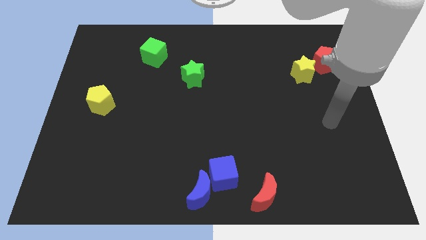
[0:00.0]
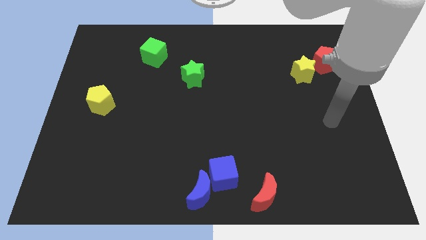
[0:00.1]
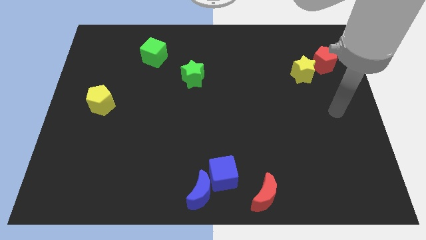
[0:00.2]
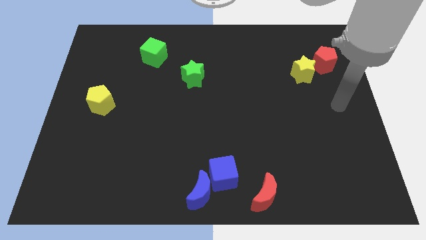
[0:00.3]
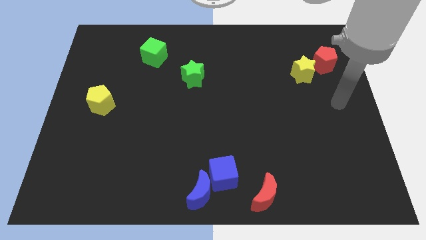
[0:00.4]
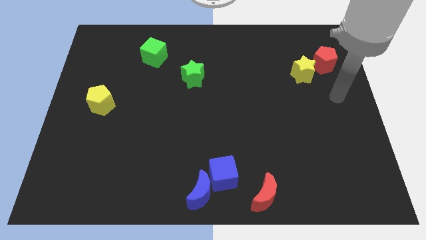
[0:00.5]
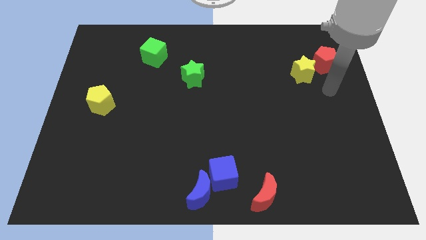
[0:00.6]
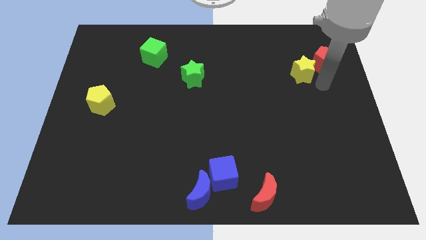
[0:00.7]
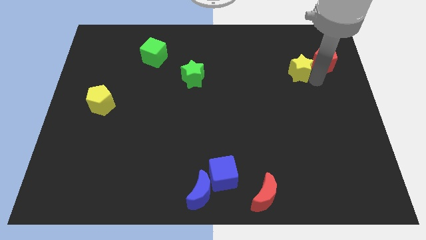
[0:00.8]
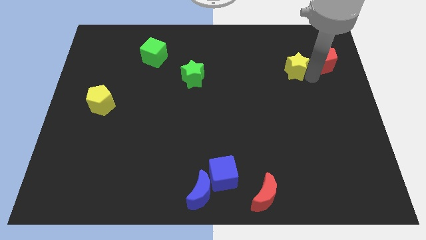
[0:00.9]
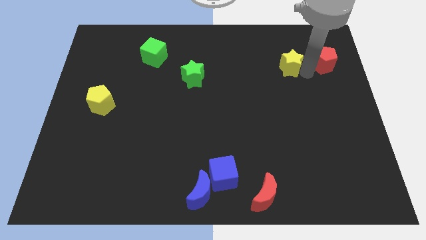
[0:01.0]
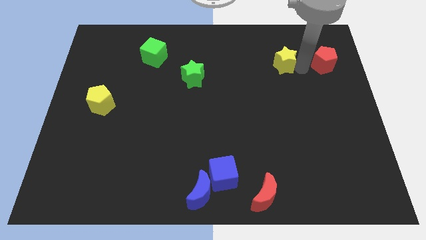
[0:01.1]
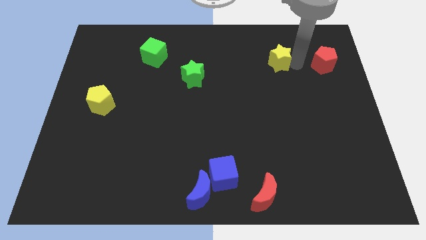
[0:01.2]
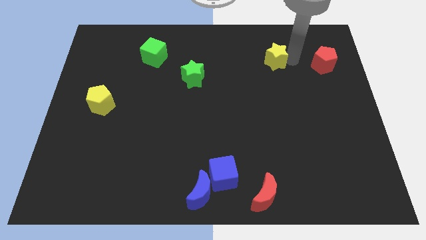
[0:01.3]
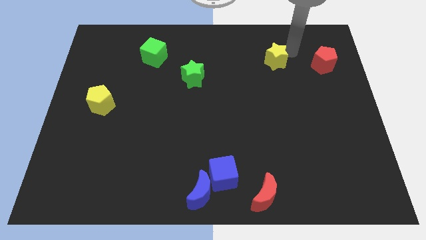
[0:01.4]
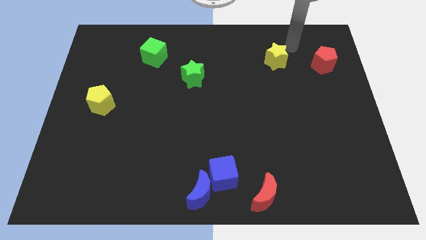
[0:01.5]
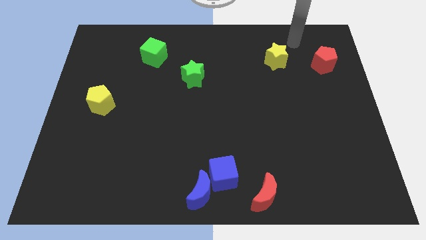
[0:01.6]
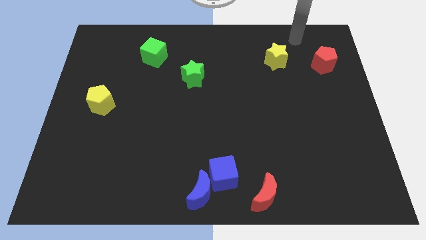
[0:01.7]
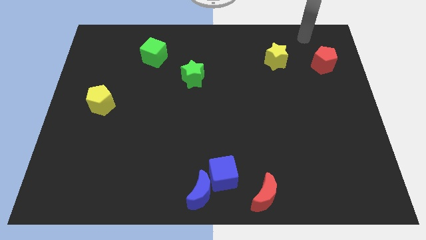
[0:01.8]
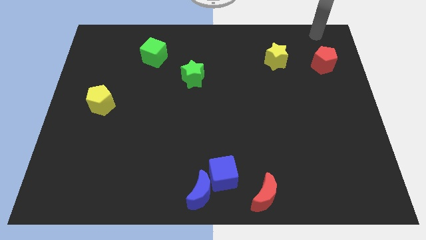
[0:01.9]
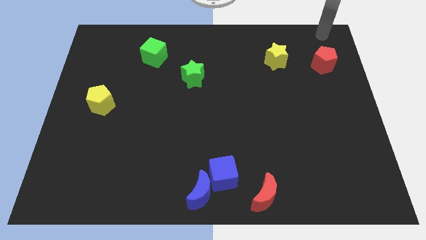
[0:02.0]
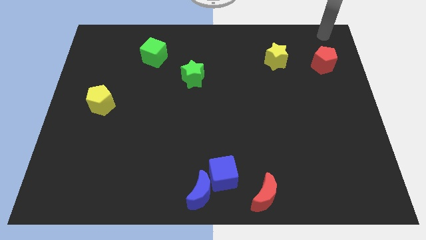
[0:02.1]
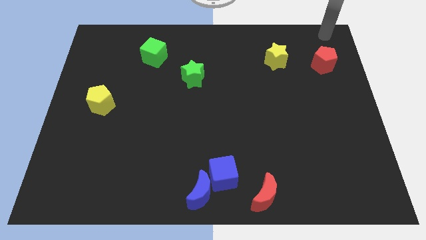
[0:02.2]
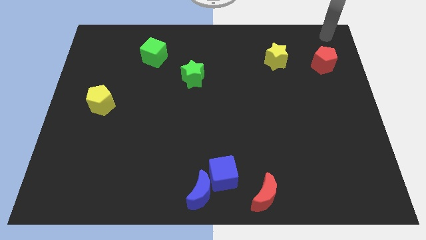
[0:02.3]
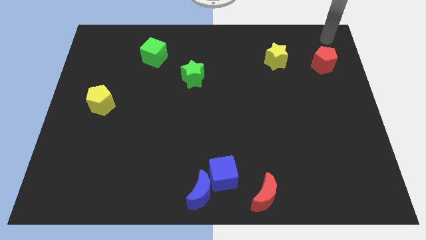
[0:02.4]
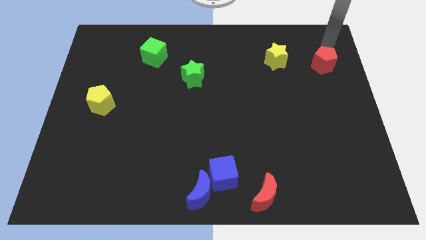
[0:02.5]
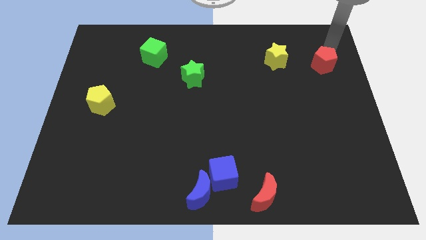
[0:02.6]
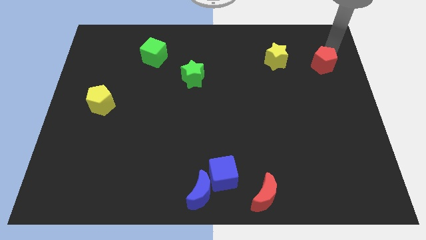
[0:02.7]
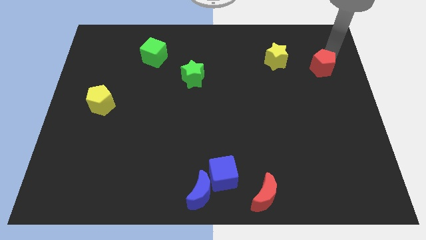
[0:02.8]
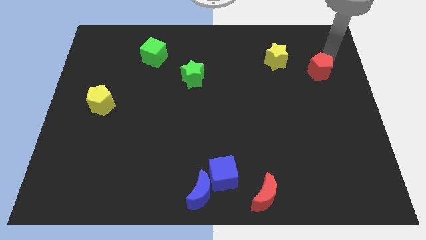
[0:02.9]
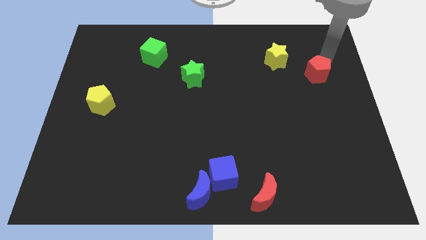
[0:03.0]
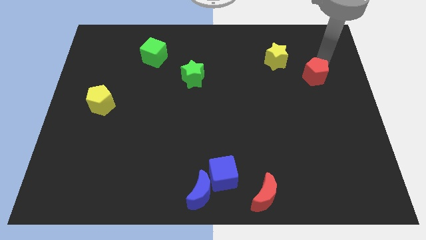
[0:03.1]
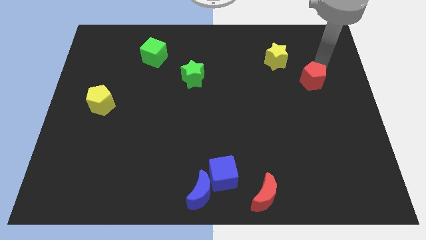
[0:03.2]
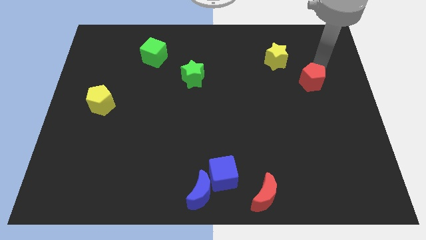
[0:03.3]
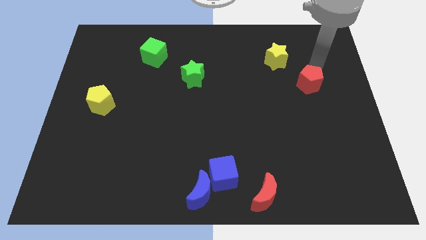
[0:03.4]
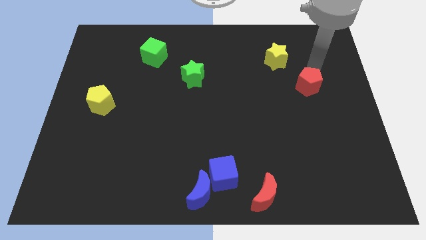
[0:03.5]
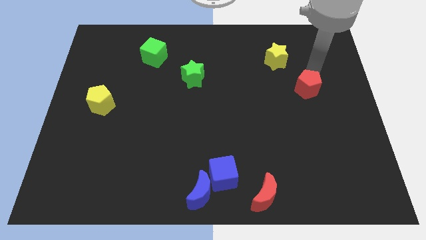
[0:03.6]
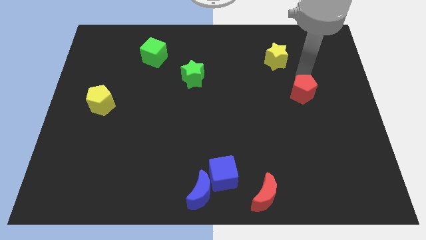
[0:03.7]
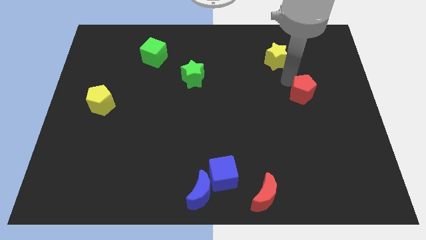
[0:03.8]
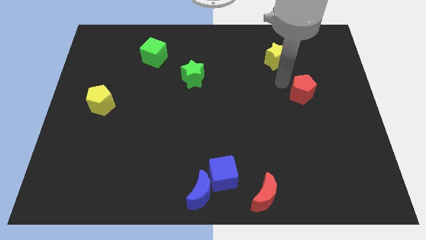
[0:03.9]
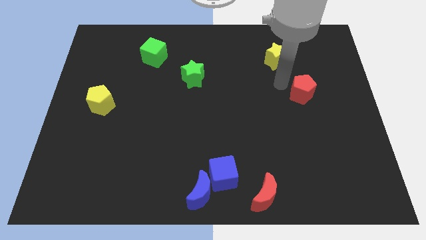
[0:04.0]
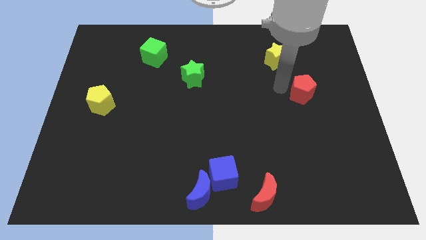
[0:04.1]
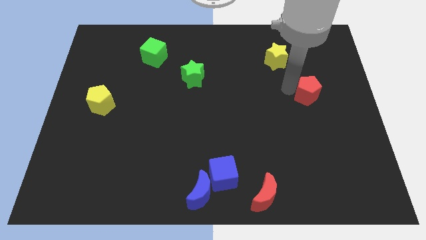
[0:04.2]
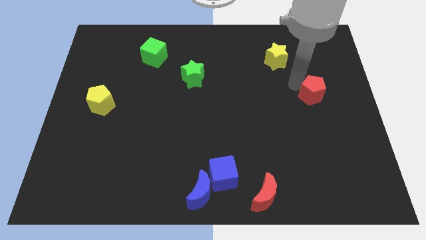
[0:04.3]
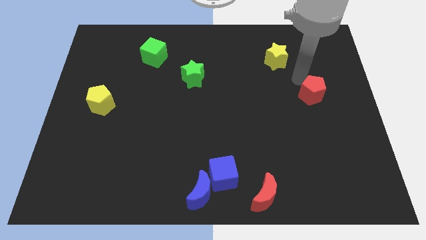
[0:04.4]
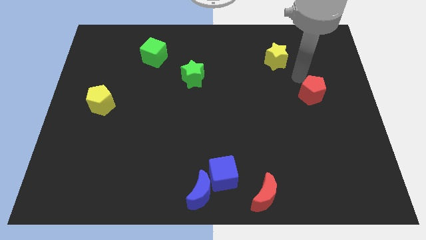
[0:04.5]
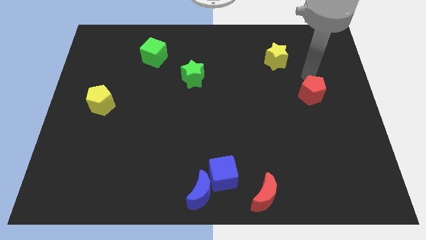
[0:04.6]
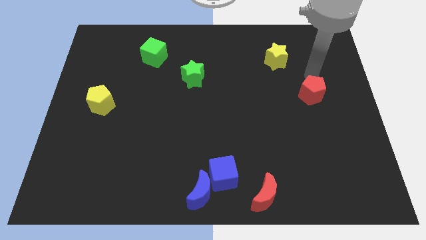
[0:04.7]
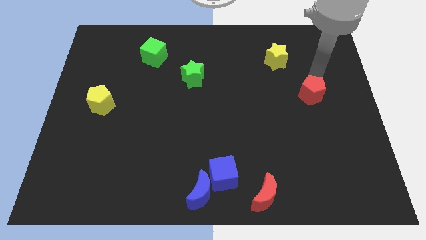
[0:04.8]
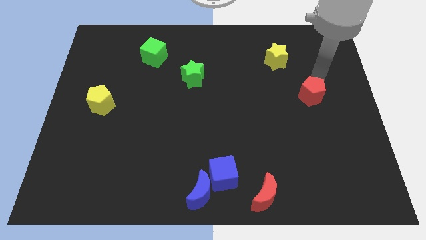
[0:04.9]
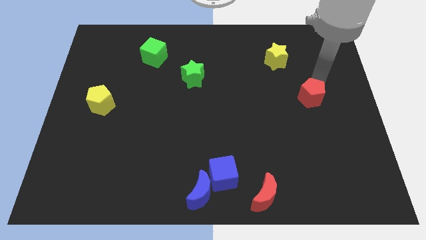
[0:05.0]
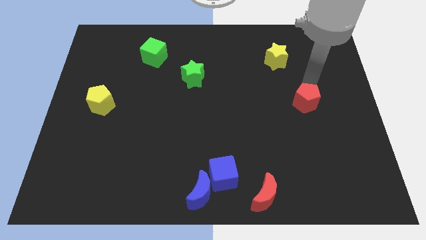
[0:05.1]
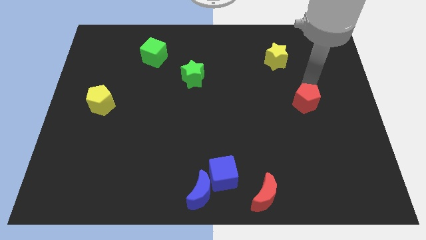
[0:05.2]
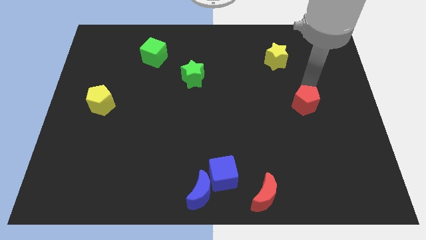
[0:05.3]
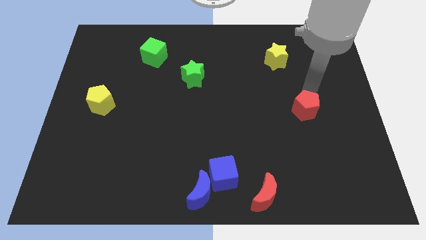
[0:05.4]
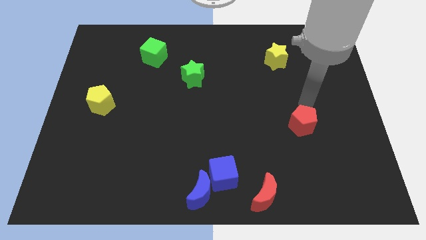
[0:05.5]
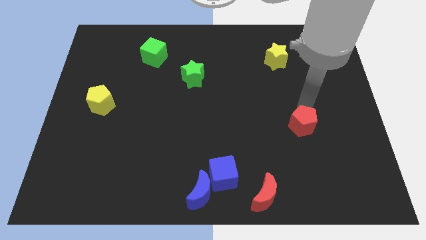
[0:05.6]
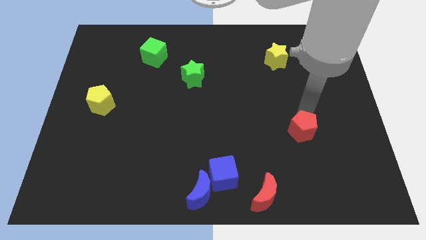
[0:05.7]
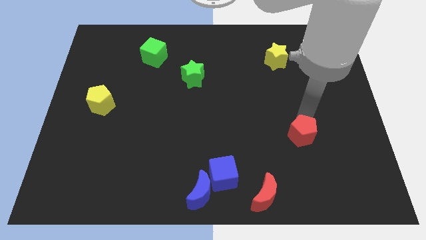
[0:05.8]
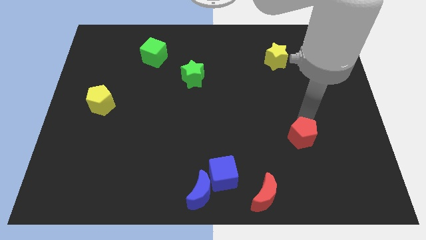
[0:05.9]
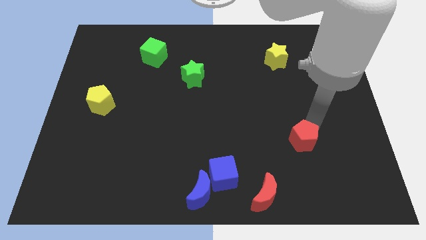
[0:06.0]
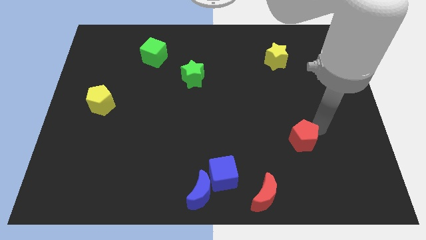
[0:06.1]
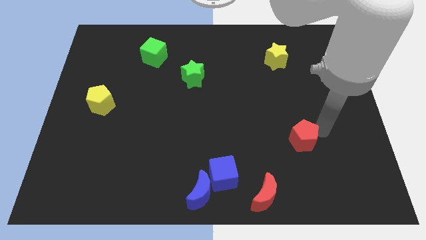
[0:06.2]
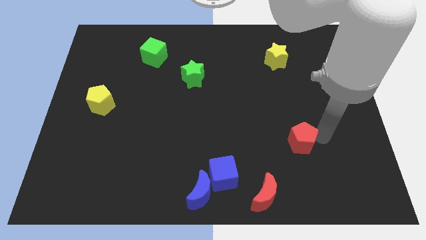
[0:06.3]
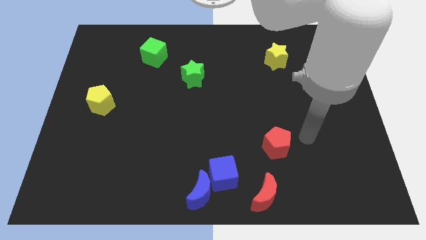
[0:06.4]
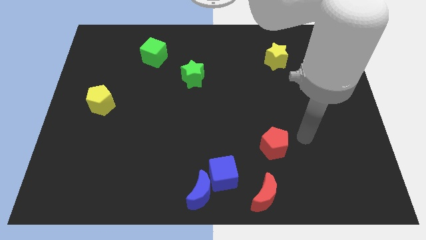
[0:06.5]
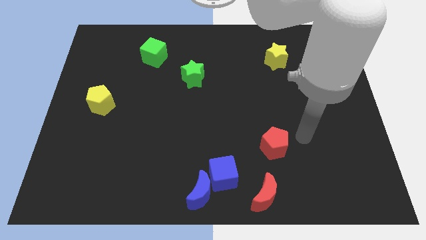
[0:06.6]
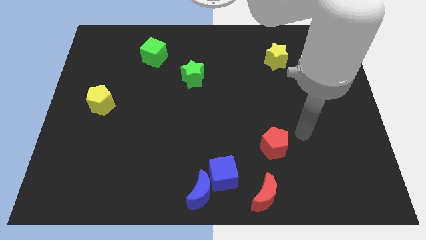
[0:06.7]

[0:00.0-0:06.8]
seperate the yellow star and the red pentagon

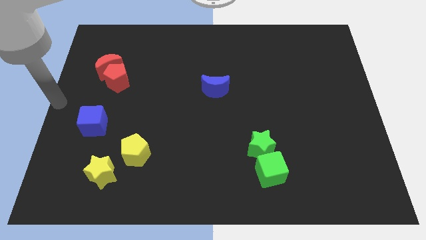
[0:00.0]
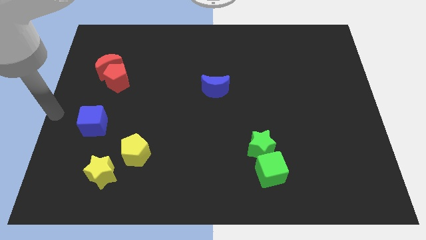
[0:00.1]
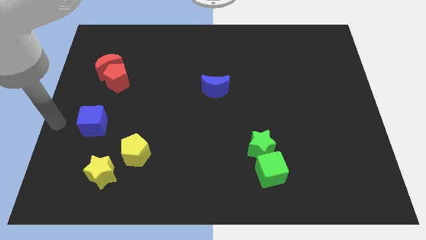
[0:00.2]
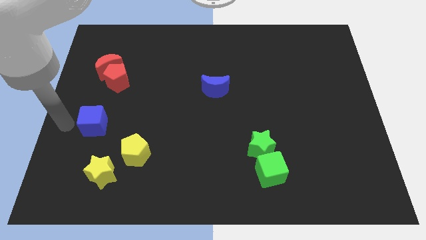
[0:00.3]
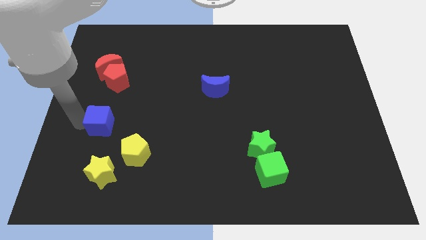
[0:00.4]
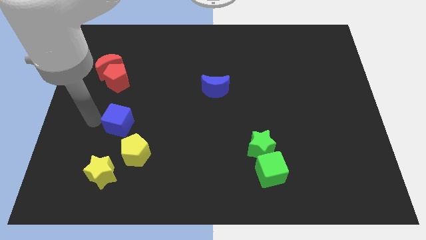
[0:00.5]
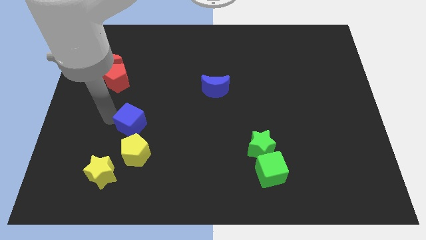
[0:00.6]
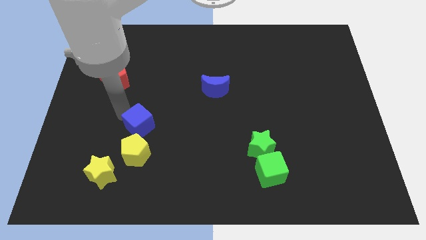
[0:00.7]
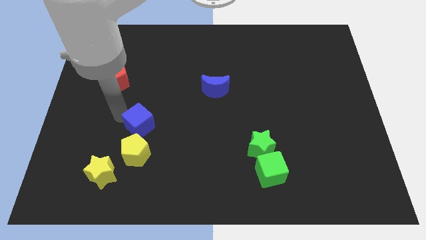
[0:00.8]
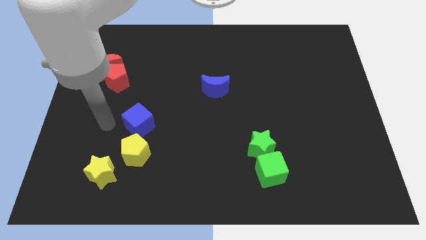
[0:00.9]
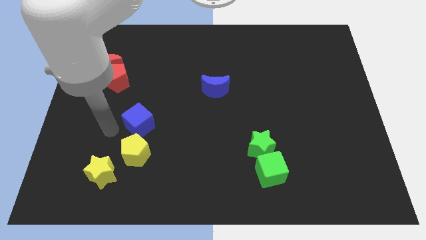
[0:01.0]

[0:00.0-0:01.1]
place the blue cube on top of the yellow pentagon

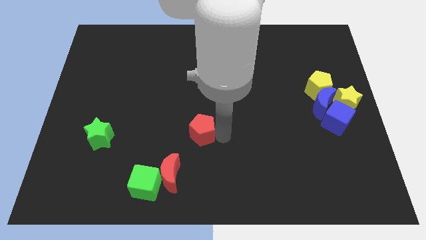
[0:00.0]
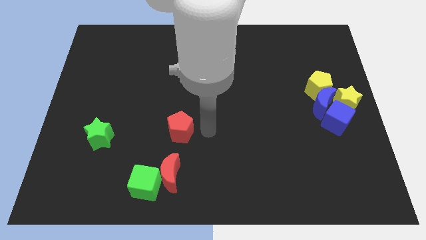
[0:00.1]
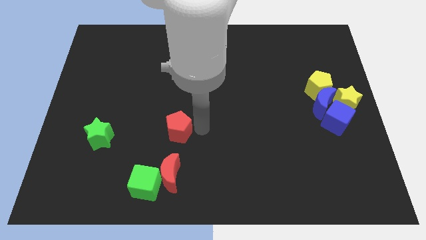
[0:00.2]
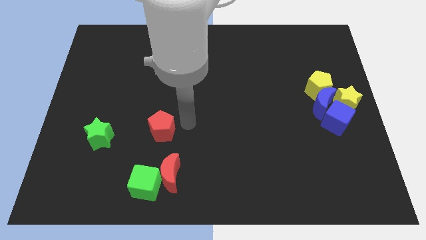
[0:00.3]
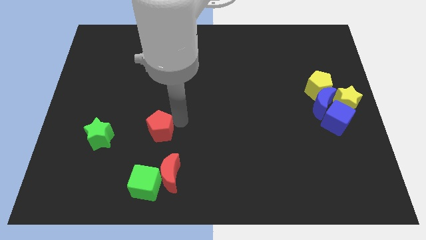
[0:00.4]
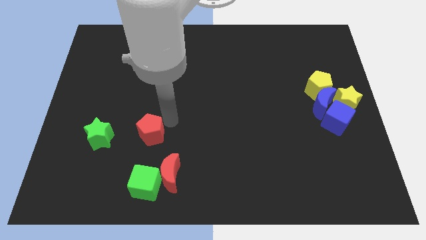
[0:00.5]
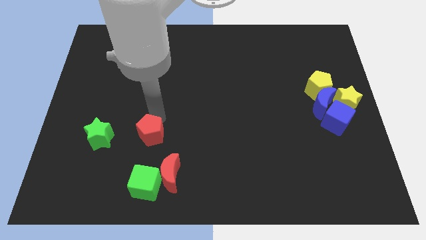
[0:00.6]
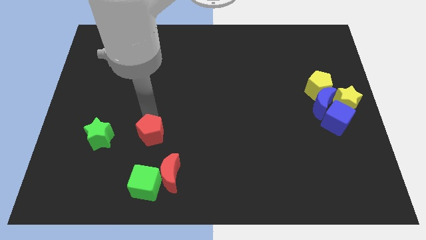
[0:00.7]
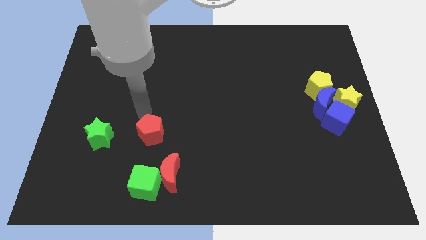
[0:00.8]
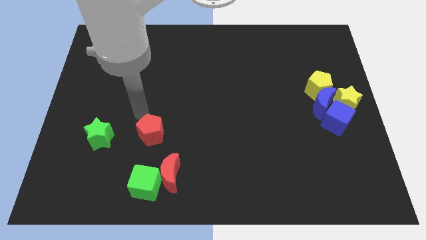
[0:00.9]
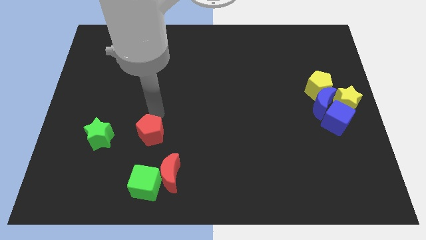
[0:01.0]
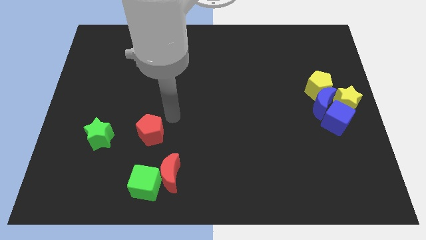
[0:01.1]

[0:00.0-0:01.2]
place the red pentagon above the green cube
